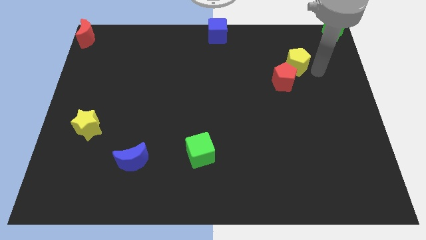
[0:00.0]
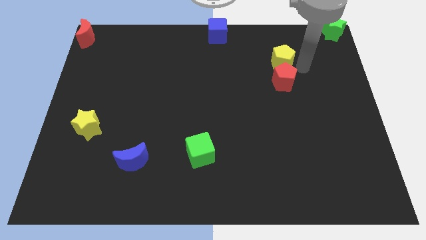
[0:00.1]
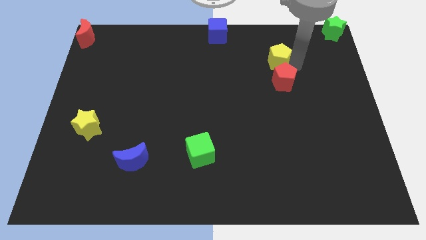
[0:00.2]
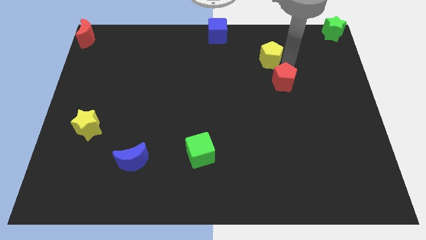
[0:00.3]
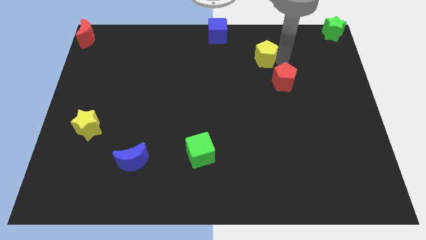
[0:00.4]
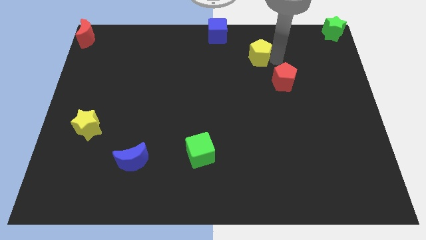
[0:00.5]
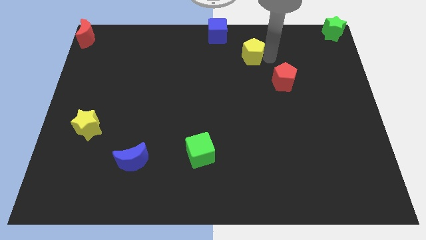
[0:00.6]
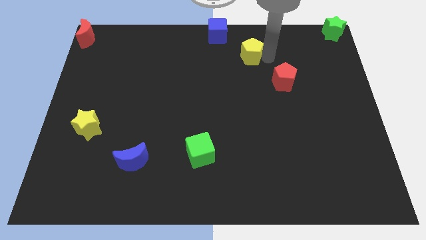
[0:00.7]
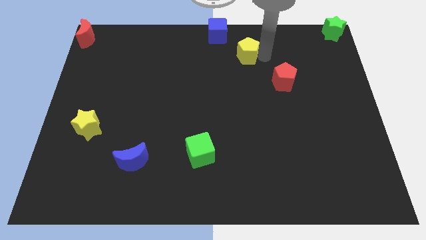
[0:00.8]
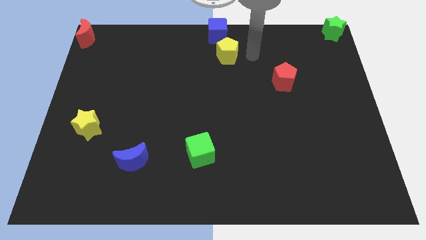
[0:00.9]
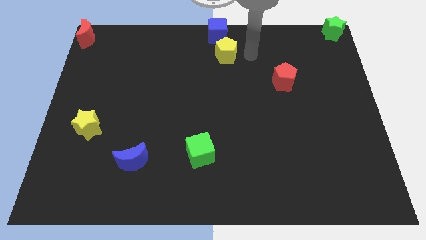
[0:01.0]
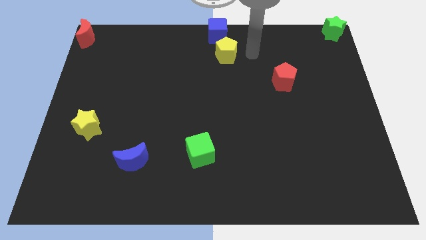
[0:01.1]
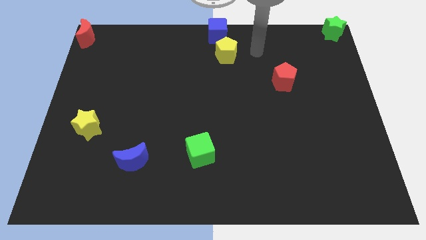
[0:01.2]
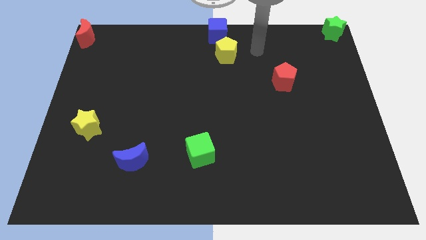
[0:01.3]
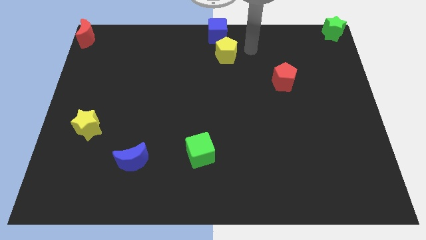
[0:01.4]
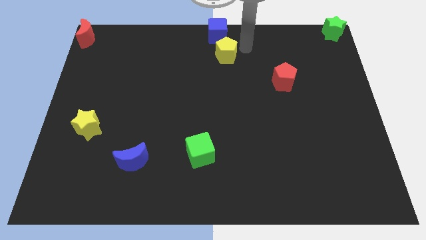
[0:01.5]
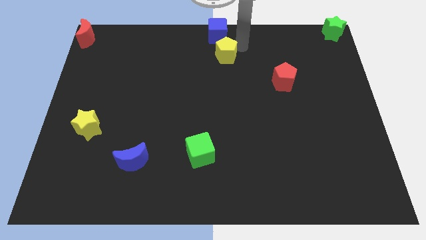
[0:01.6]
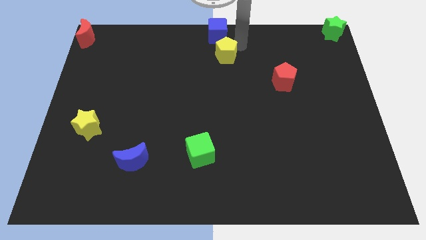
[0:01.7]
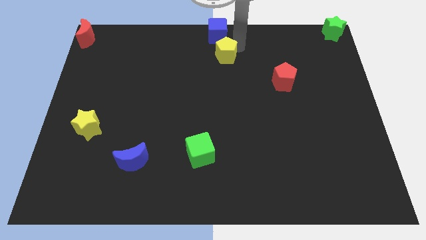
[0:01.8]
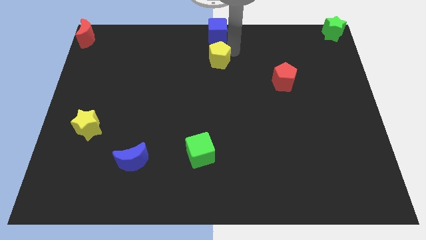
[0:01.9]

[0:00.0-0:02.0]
move the yellow pentagon to the bottom side of the blue cube

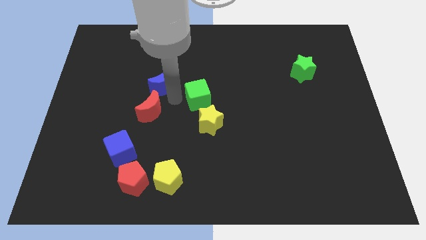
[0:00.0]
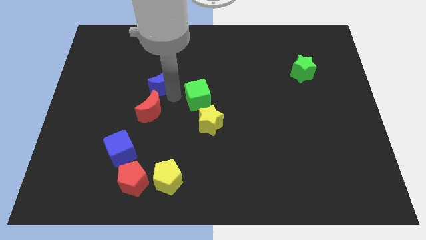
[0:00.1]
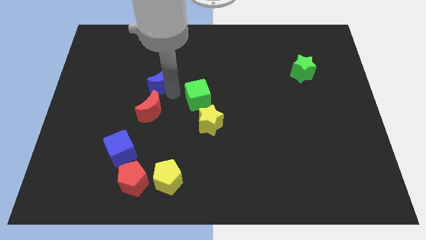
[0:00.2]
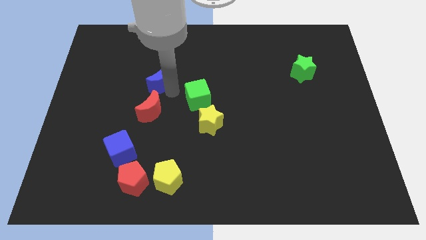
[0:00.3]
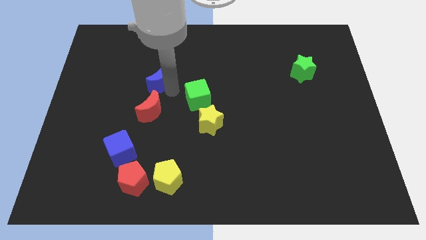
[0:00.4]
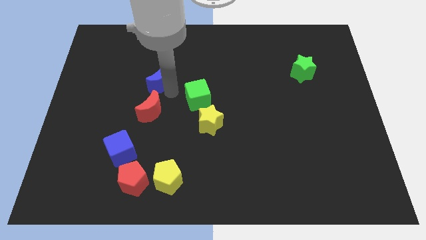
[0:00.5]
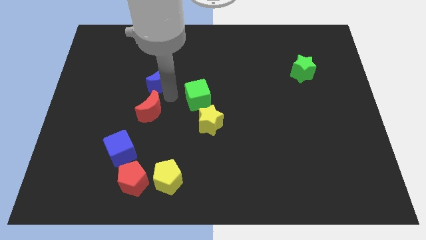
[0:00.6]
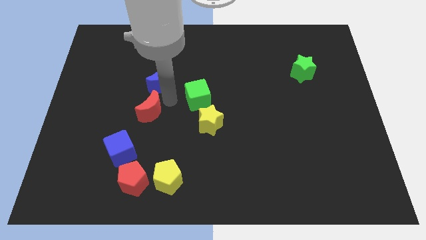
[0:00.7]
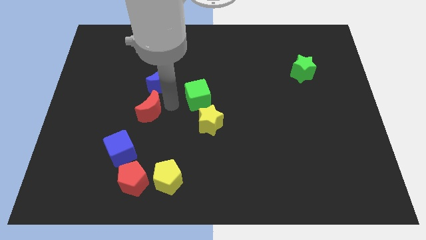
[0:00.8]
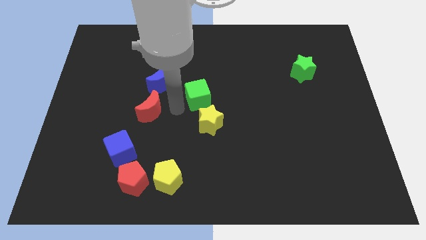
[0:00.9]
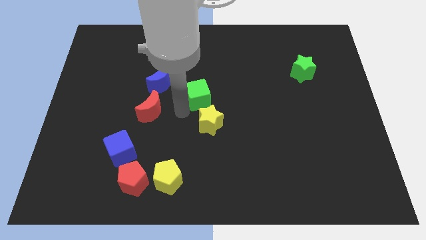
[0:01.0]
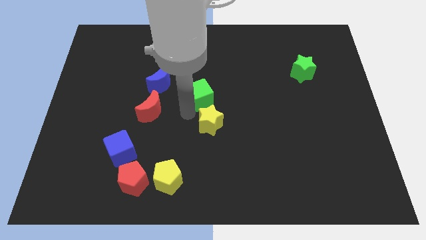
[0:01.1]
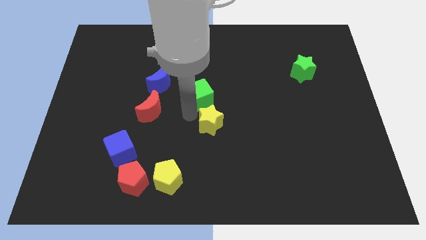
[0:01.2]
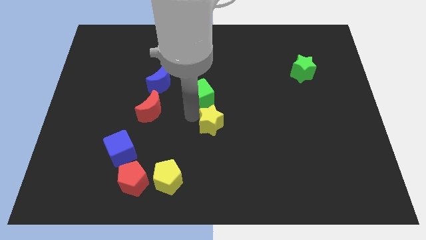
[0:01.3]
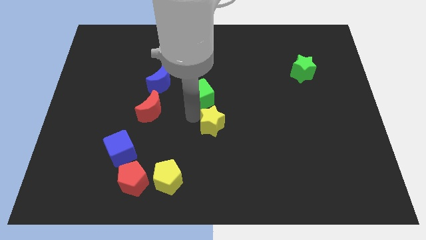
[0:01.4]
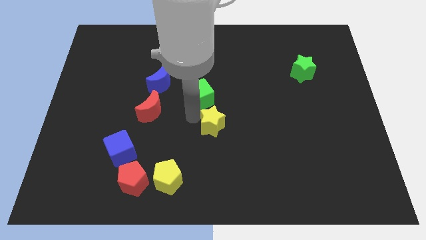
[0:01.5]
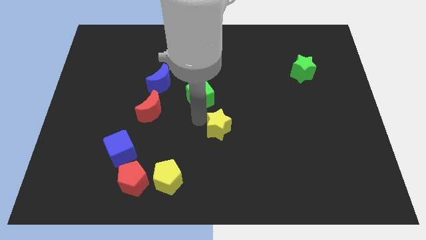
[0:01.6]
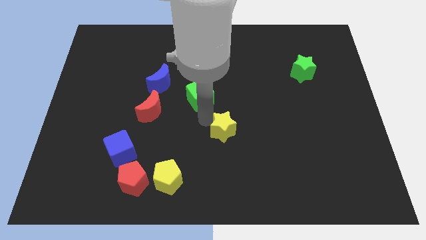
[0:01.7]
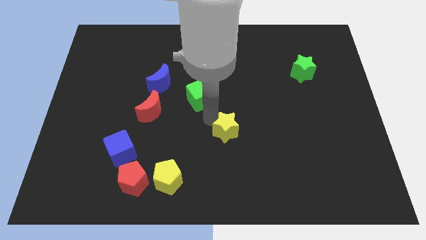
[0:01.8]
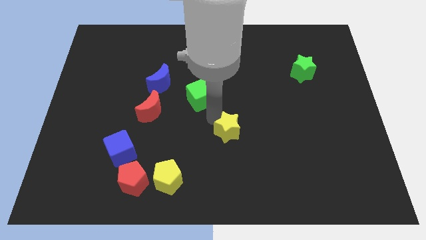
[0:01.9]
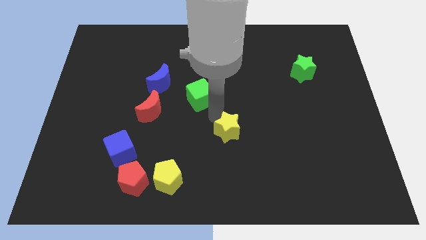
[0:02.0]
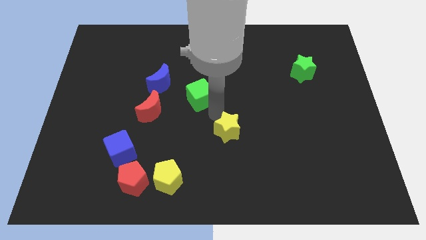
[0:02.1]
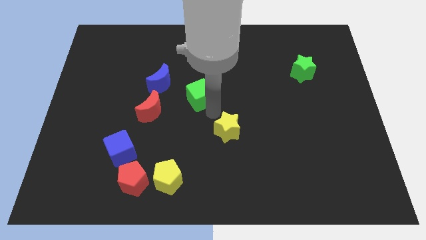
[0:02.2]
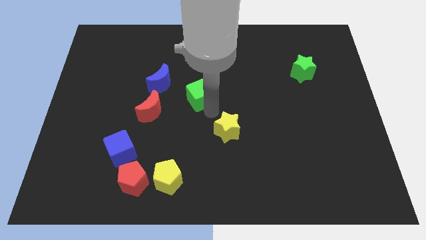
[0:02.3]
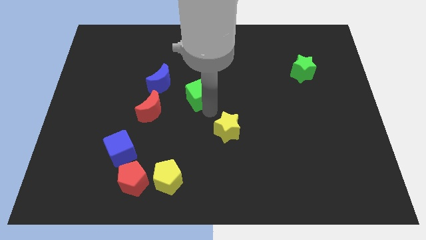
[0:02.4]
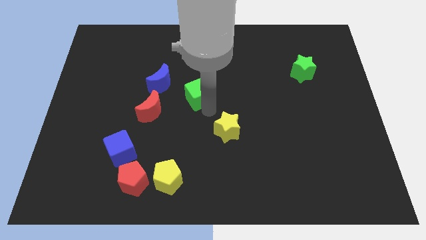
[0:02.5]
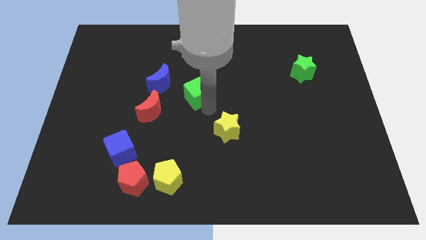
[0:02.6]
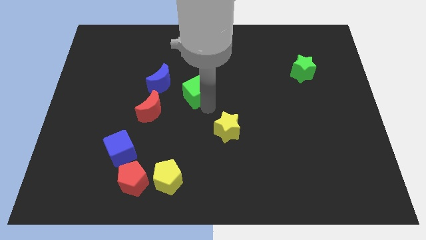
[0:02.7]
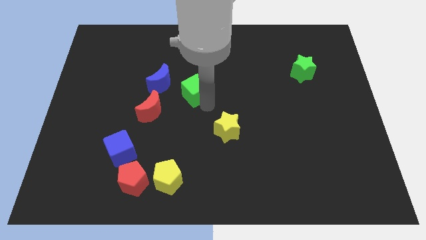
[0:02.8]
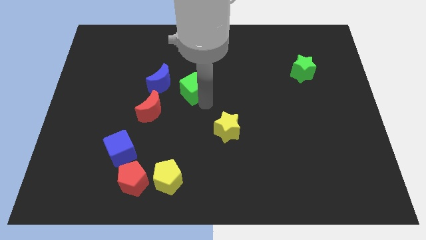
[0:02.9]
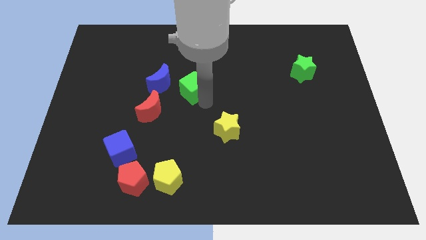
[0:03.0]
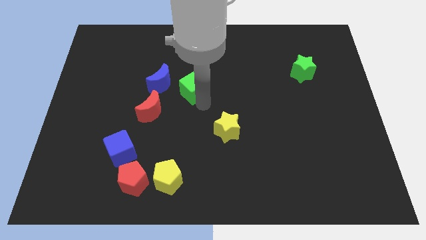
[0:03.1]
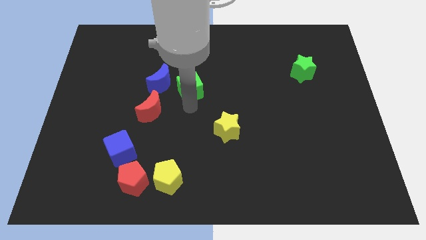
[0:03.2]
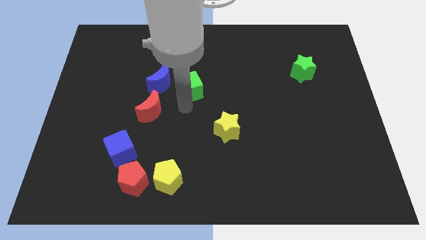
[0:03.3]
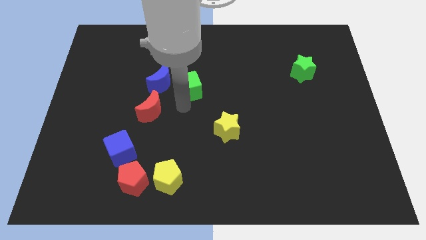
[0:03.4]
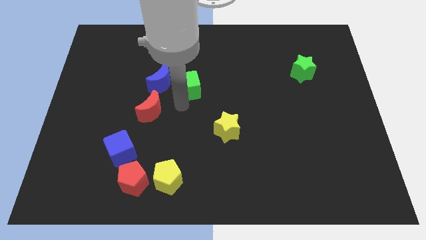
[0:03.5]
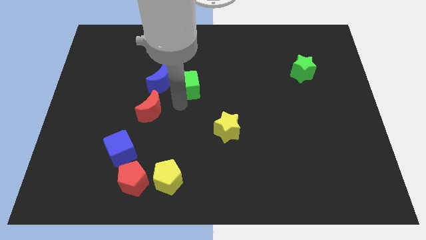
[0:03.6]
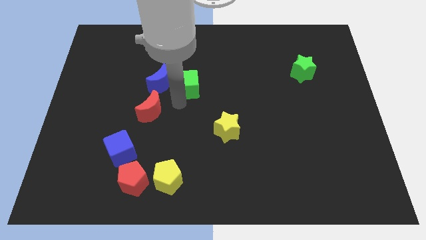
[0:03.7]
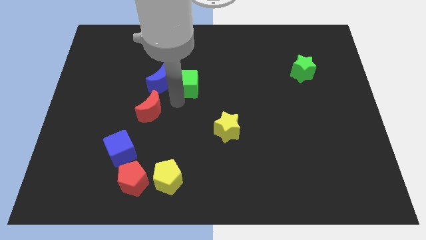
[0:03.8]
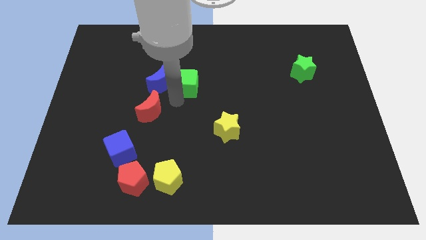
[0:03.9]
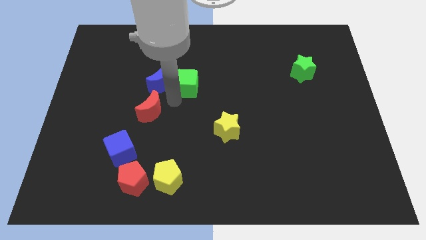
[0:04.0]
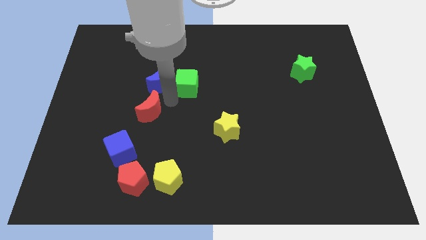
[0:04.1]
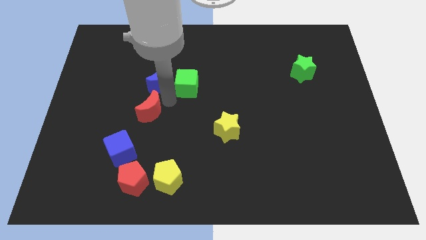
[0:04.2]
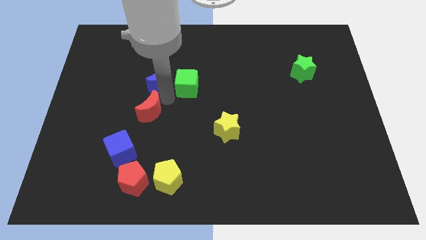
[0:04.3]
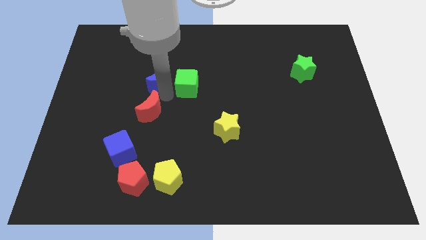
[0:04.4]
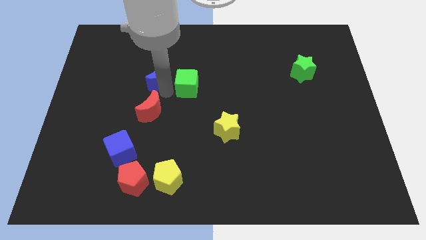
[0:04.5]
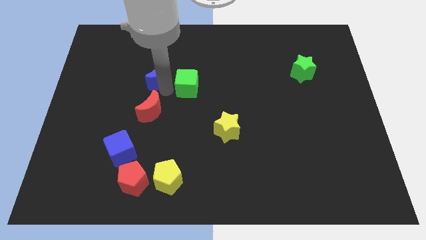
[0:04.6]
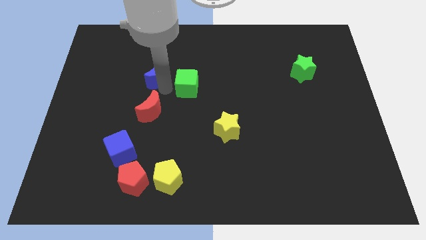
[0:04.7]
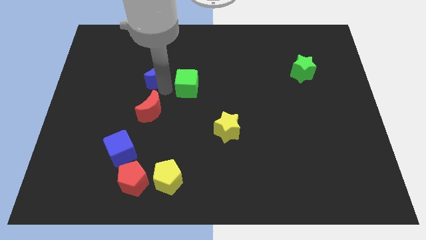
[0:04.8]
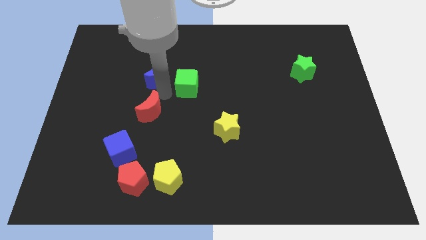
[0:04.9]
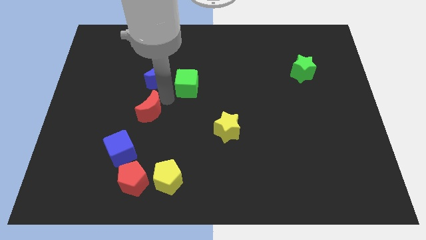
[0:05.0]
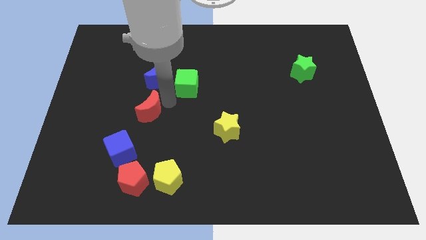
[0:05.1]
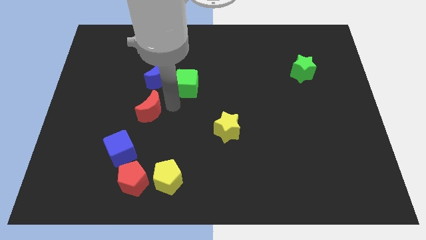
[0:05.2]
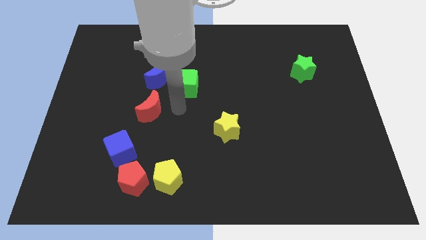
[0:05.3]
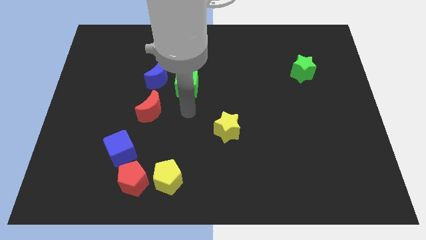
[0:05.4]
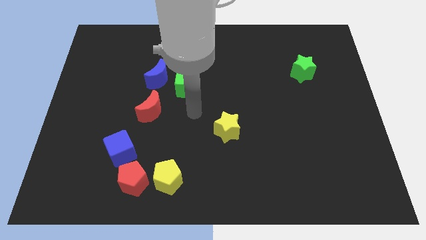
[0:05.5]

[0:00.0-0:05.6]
adjust the blue moon green cube and red moon to form a triangle

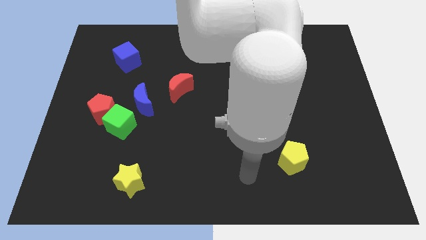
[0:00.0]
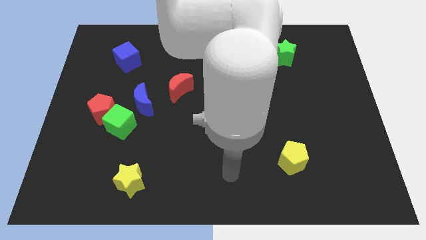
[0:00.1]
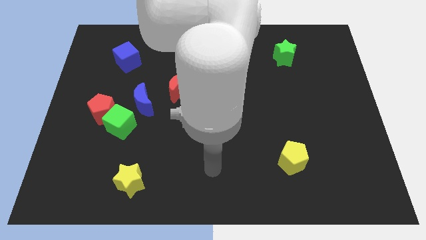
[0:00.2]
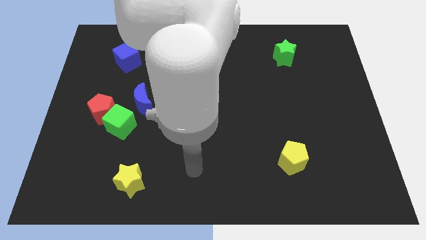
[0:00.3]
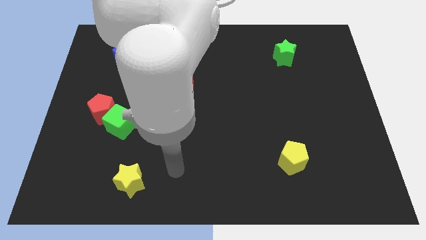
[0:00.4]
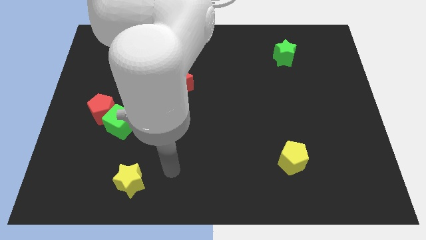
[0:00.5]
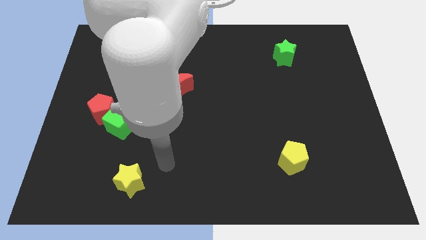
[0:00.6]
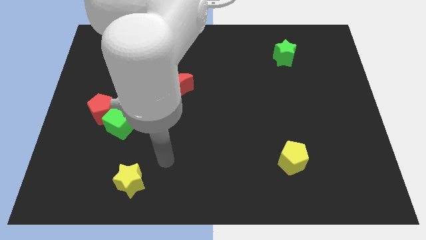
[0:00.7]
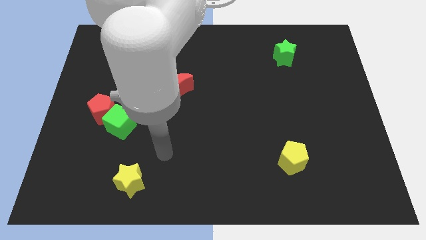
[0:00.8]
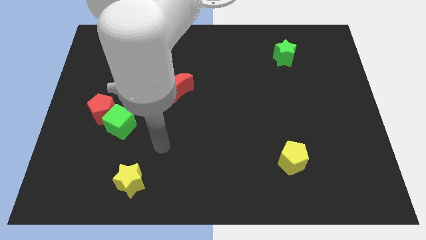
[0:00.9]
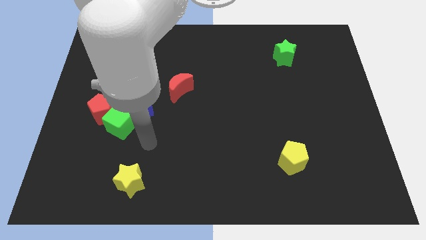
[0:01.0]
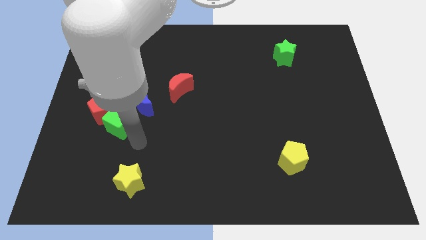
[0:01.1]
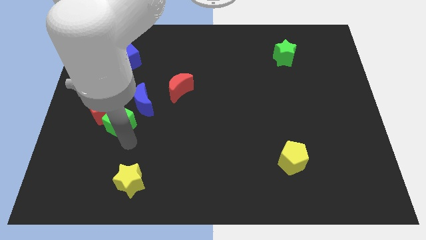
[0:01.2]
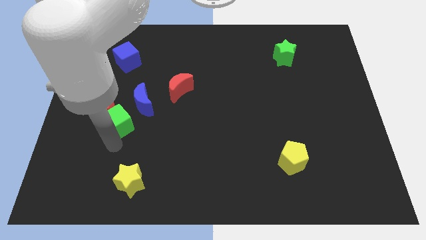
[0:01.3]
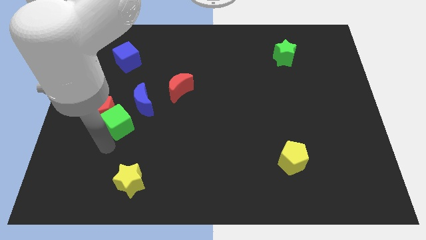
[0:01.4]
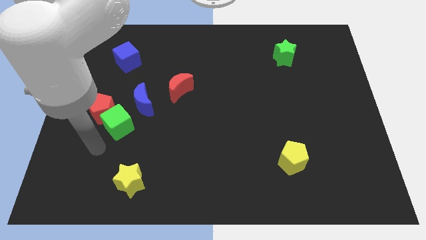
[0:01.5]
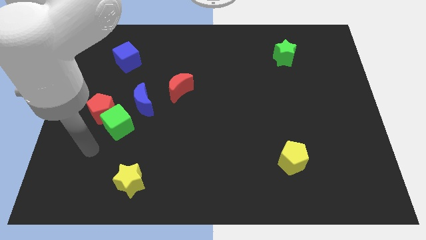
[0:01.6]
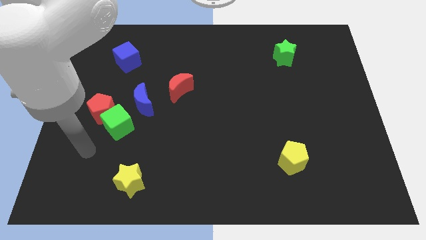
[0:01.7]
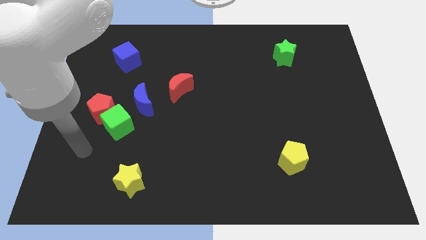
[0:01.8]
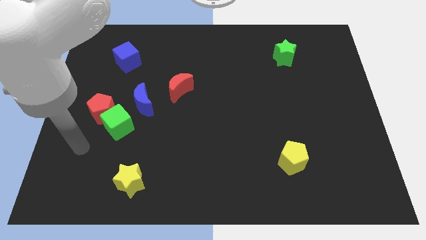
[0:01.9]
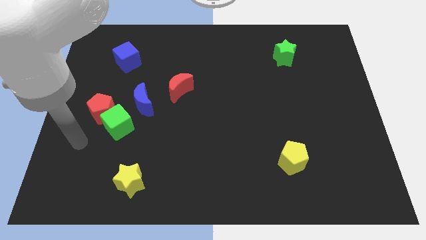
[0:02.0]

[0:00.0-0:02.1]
place the arm on the bottom left of the green cube
